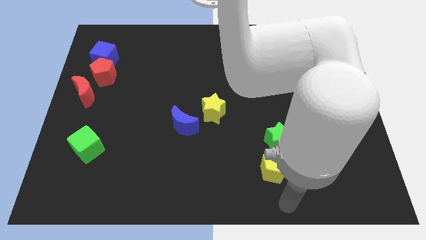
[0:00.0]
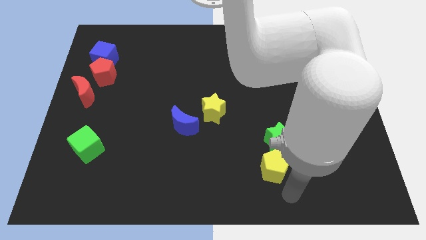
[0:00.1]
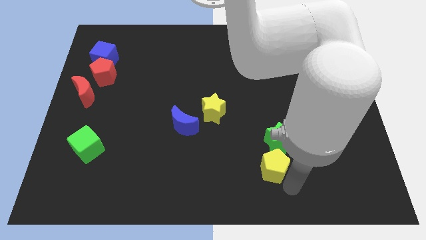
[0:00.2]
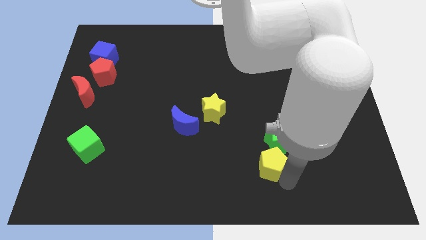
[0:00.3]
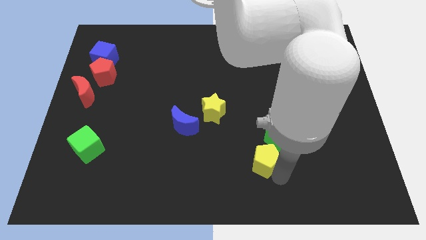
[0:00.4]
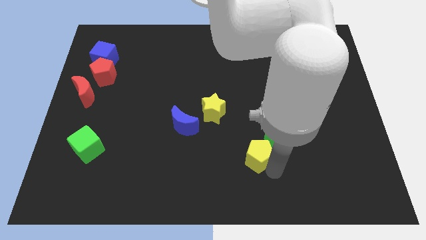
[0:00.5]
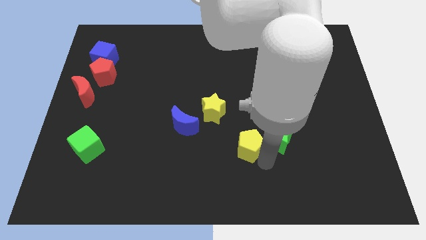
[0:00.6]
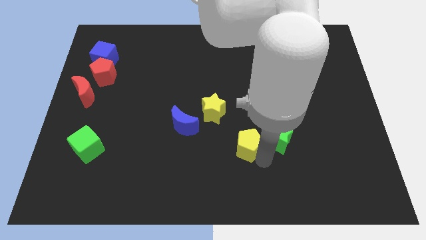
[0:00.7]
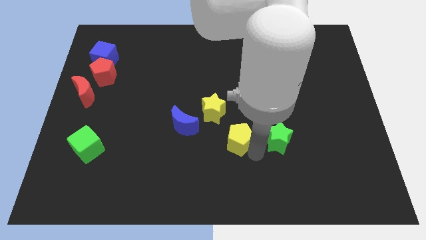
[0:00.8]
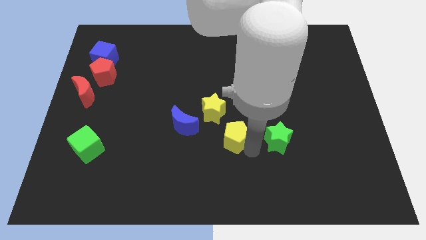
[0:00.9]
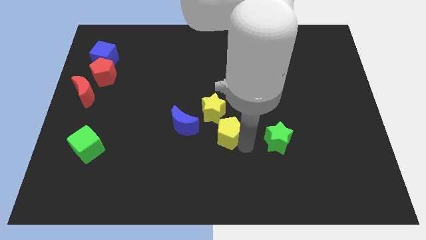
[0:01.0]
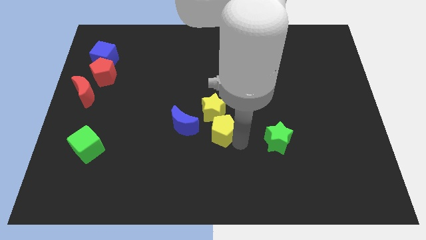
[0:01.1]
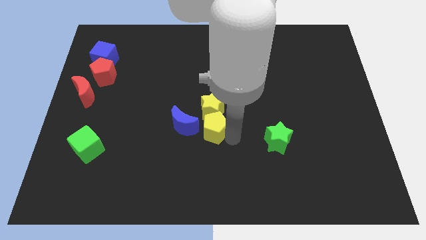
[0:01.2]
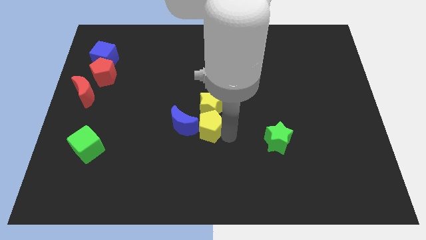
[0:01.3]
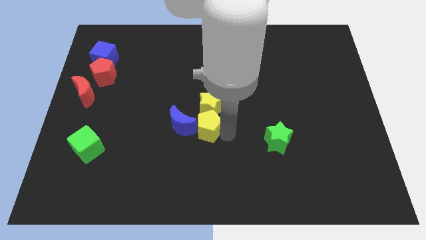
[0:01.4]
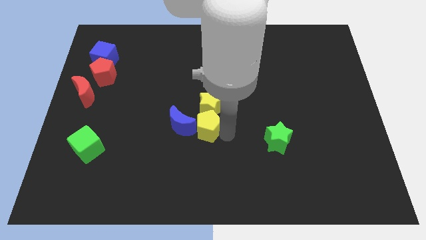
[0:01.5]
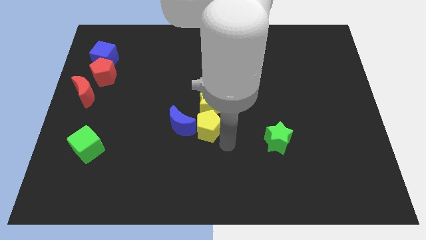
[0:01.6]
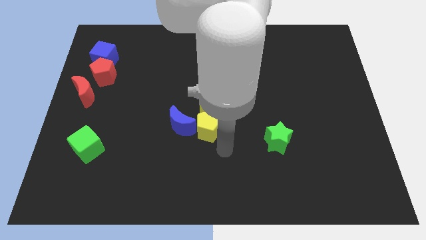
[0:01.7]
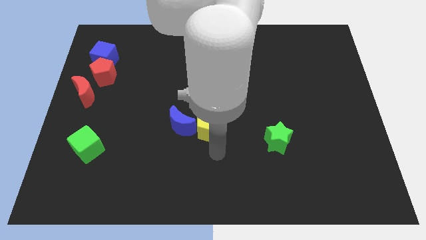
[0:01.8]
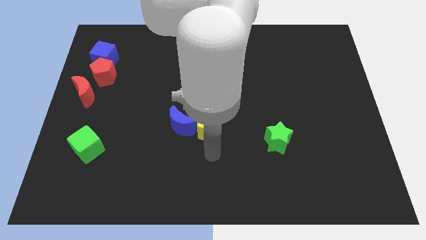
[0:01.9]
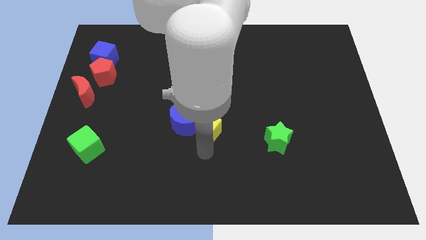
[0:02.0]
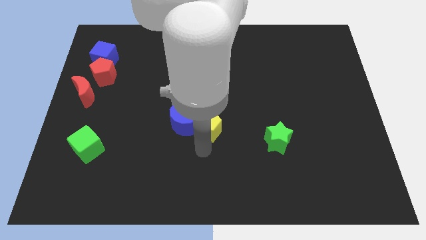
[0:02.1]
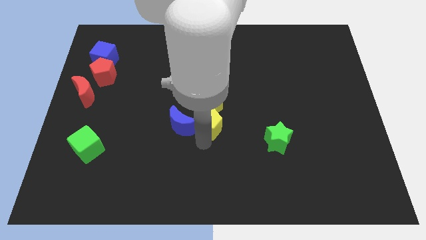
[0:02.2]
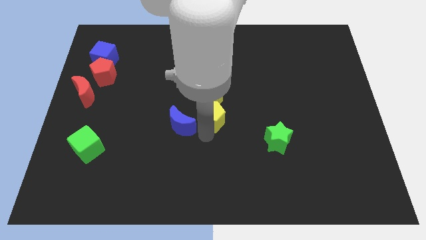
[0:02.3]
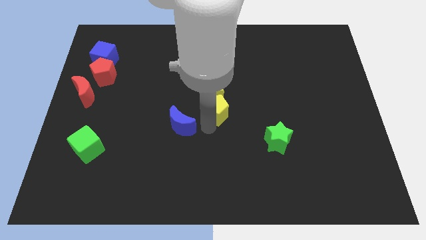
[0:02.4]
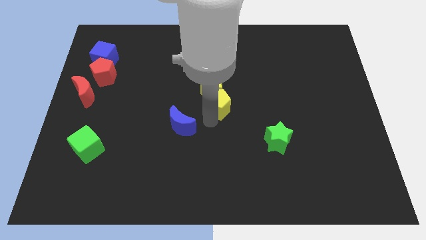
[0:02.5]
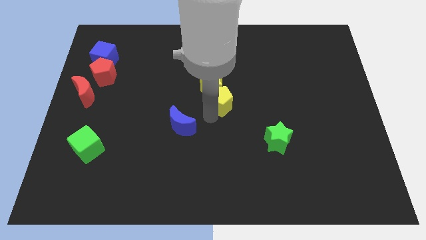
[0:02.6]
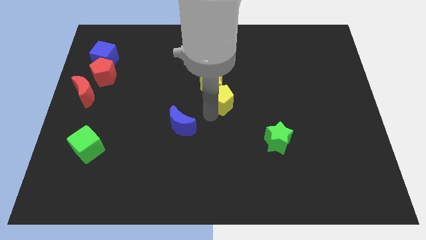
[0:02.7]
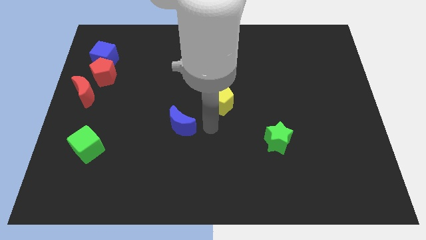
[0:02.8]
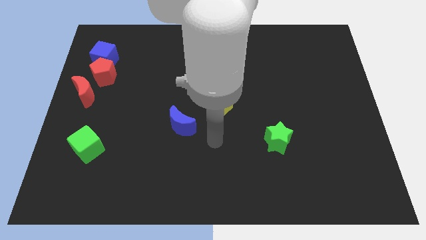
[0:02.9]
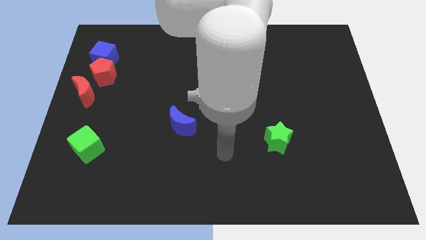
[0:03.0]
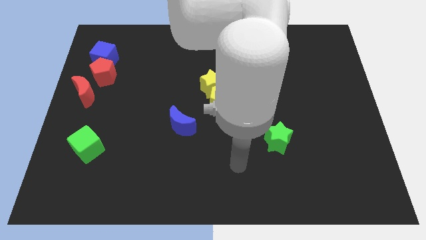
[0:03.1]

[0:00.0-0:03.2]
place both the yellow blocks at the center of the board

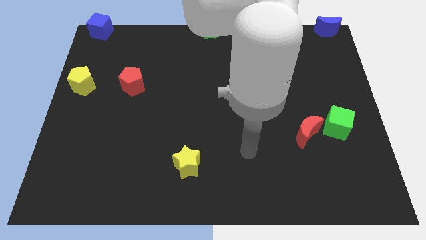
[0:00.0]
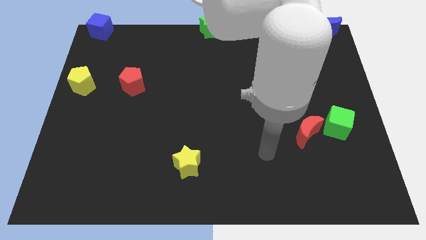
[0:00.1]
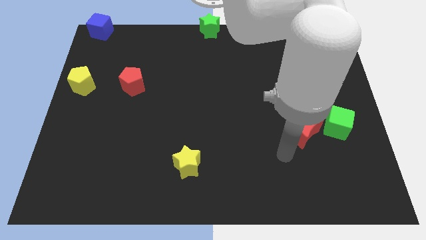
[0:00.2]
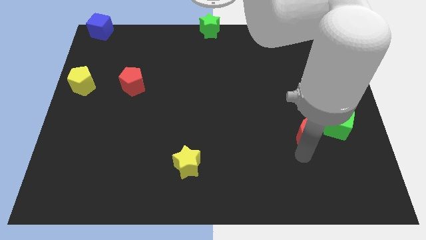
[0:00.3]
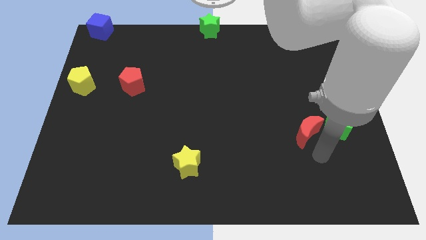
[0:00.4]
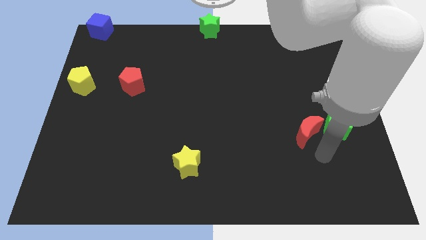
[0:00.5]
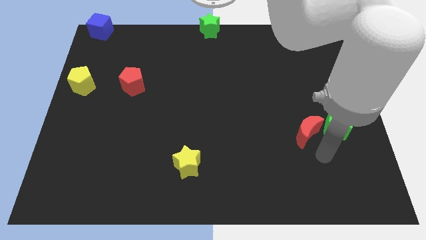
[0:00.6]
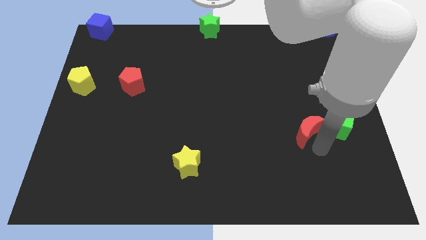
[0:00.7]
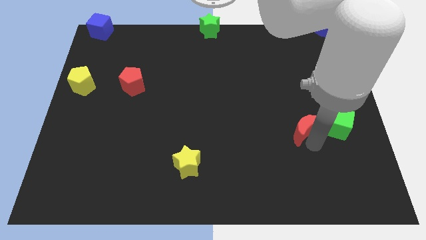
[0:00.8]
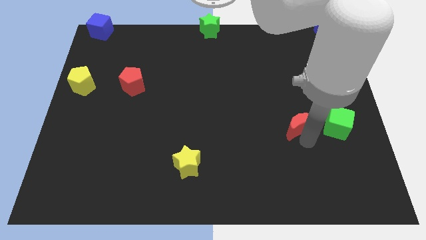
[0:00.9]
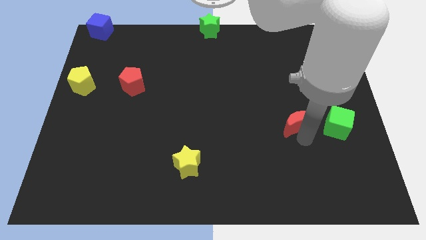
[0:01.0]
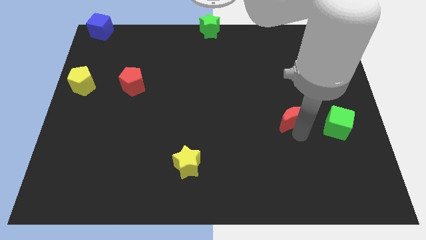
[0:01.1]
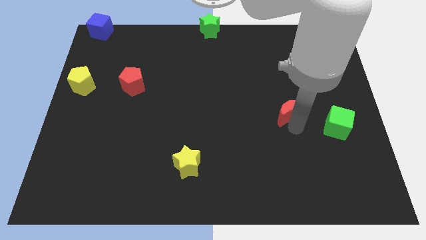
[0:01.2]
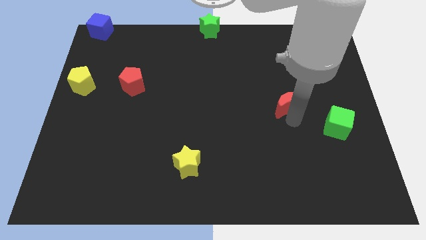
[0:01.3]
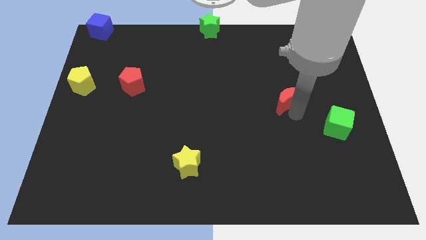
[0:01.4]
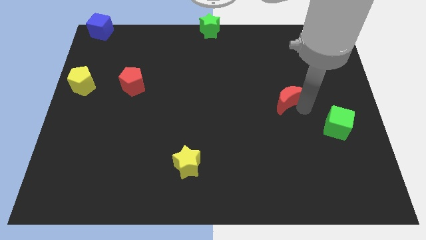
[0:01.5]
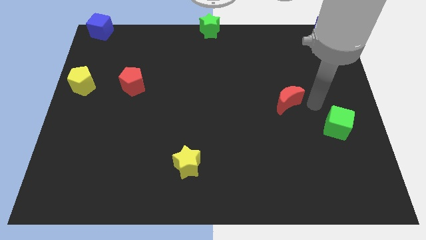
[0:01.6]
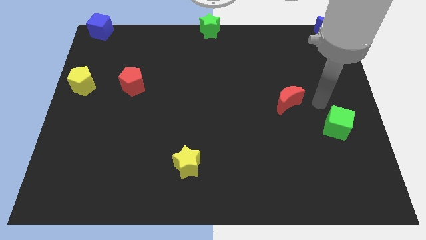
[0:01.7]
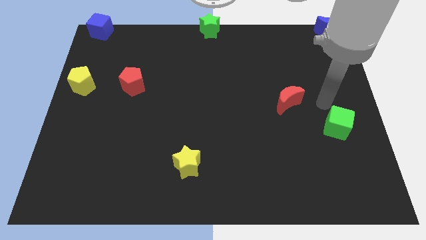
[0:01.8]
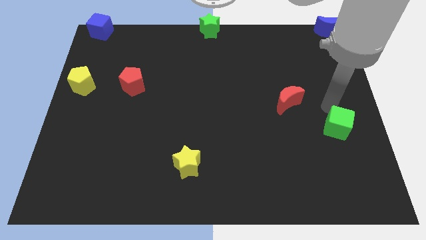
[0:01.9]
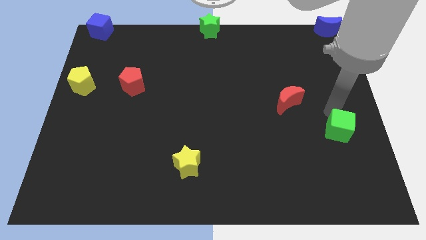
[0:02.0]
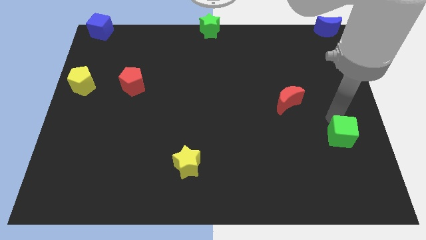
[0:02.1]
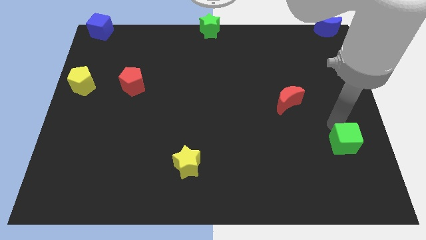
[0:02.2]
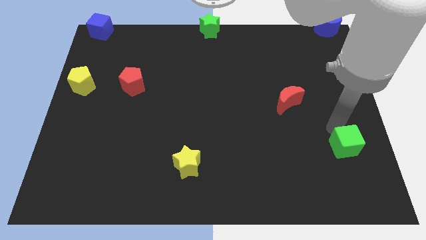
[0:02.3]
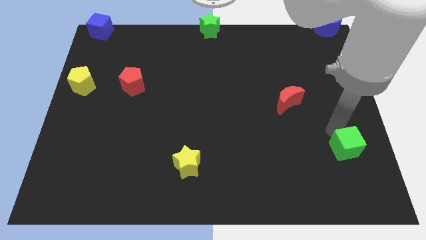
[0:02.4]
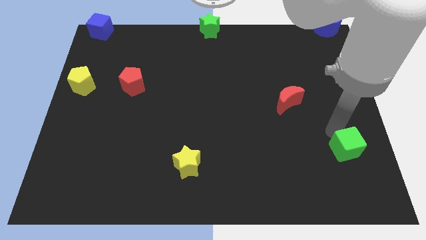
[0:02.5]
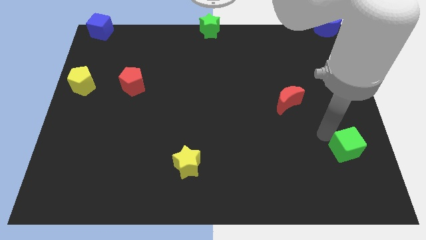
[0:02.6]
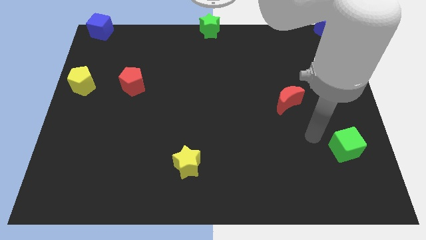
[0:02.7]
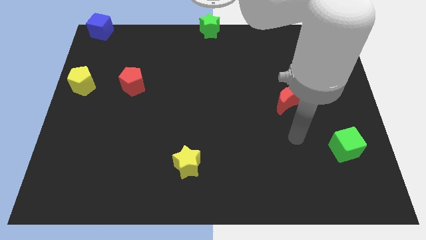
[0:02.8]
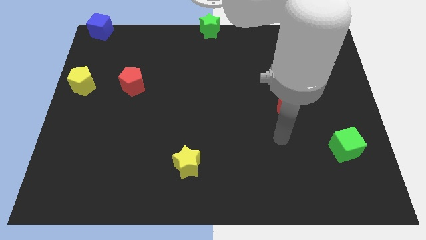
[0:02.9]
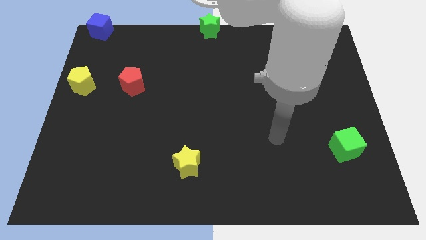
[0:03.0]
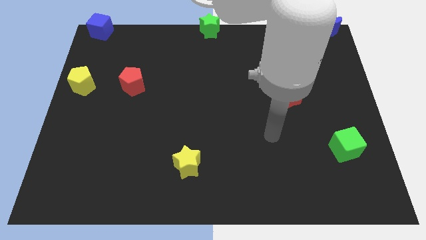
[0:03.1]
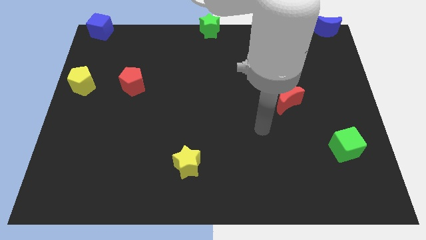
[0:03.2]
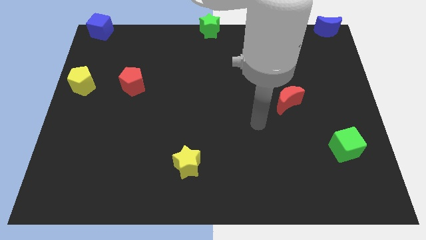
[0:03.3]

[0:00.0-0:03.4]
separate red moon and green cube

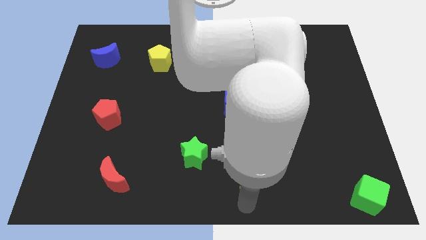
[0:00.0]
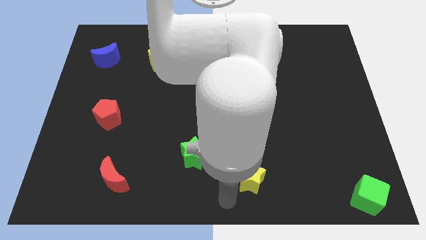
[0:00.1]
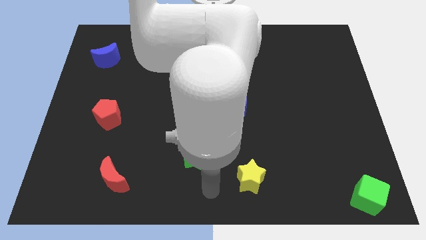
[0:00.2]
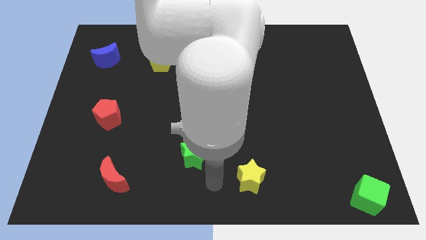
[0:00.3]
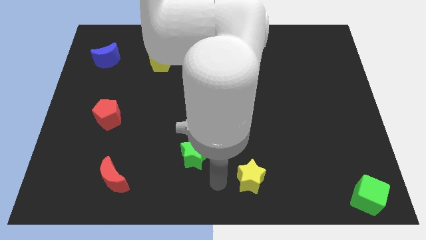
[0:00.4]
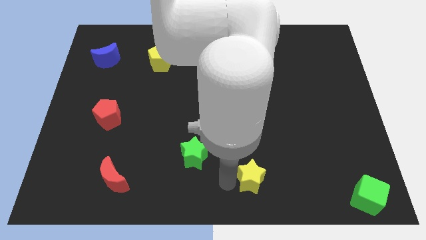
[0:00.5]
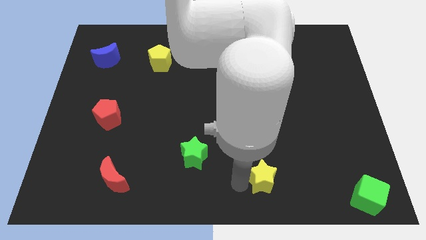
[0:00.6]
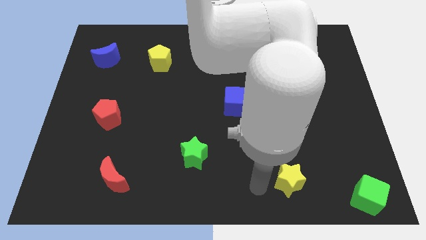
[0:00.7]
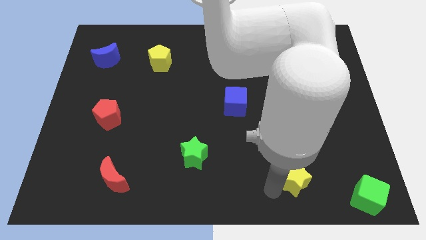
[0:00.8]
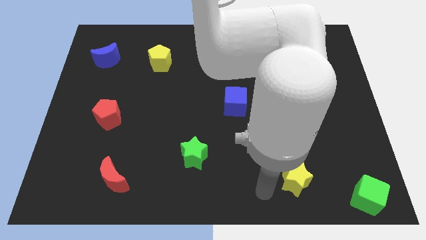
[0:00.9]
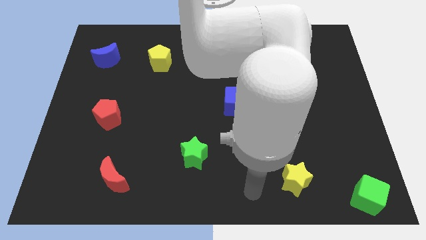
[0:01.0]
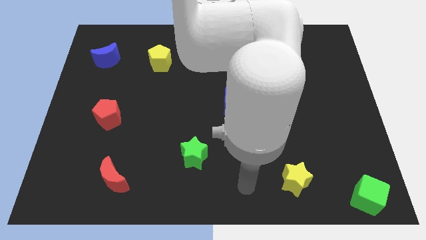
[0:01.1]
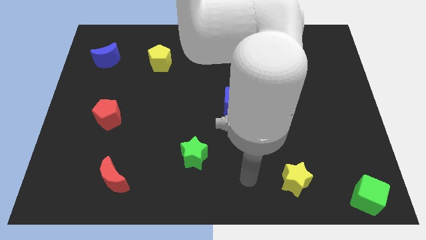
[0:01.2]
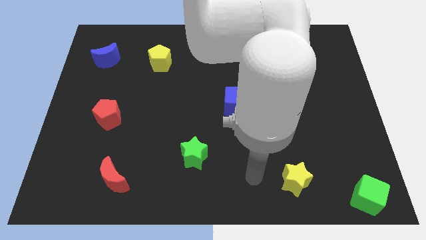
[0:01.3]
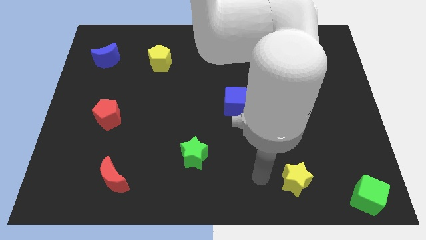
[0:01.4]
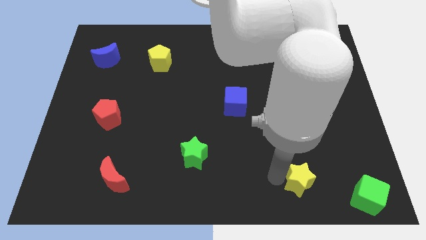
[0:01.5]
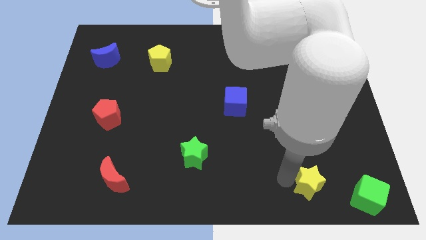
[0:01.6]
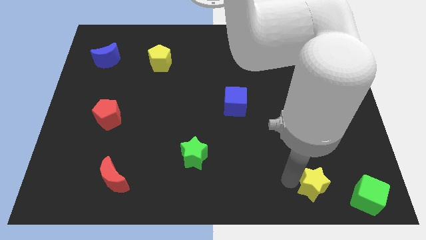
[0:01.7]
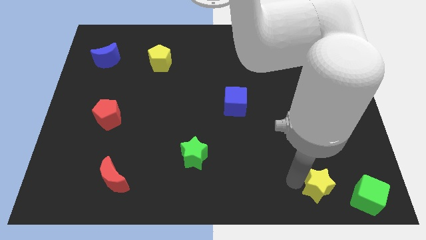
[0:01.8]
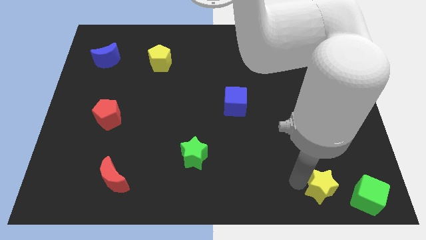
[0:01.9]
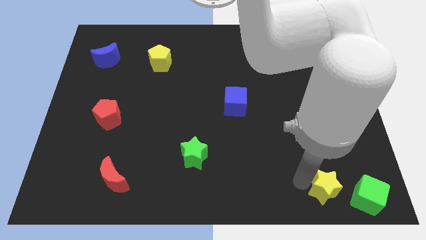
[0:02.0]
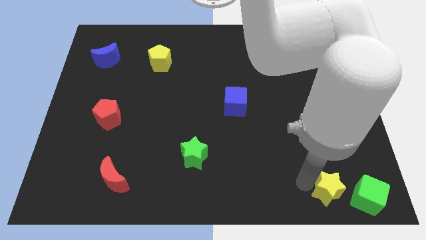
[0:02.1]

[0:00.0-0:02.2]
push the yellow star to the left side of the green cube

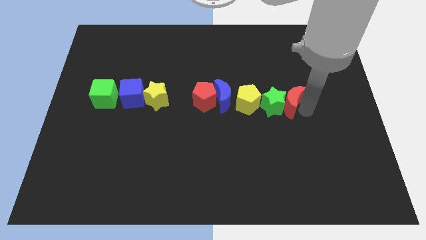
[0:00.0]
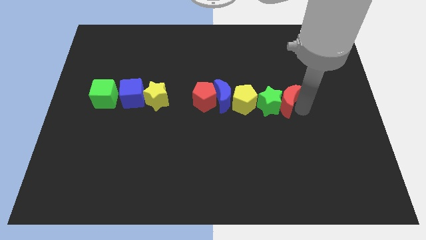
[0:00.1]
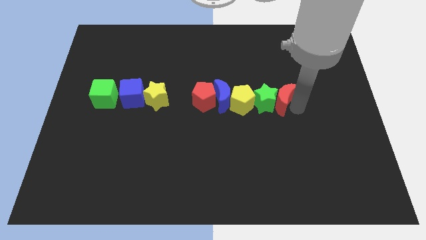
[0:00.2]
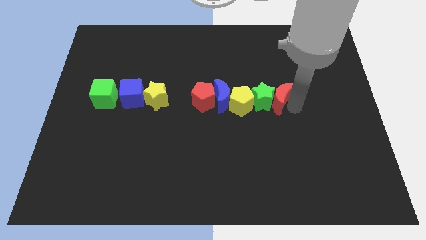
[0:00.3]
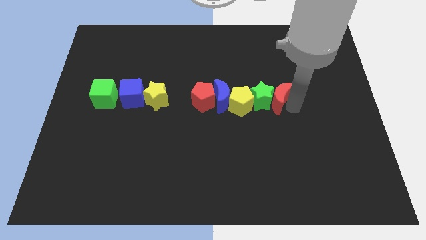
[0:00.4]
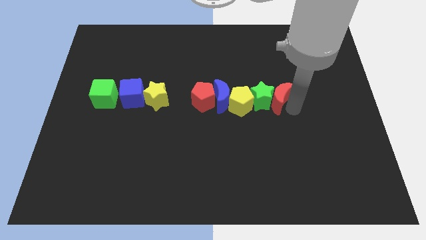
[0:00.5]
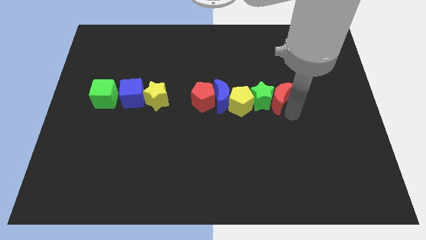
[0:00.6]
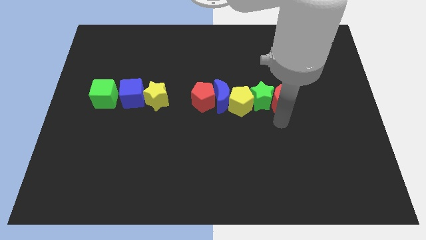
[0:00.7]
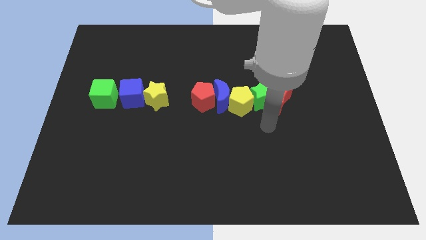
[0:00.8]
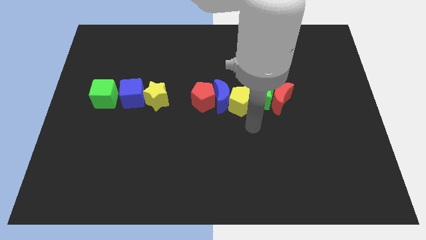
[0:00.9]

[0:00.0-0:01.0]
push red crescent slightly towards left side
